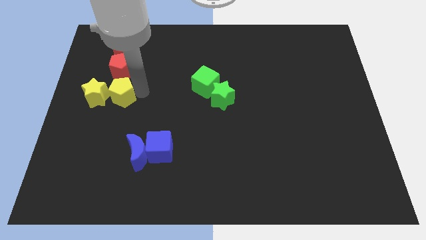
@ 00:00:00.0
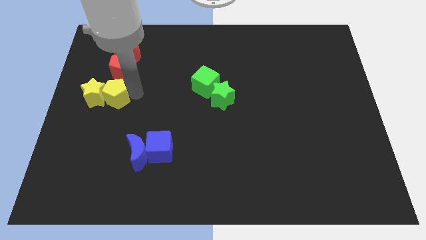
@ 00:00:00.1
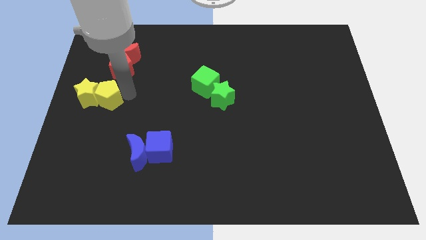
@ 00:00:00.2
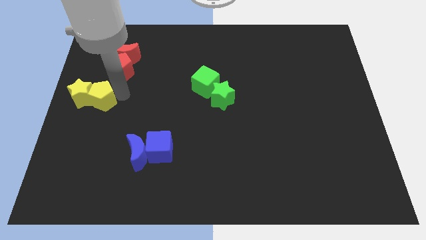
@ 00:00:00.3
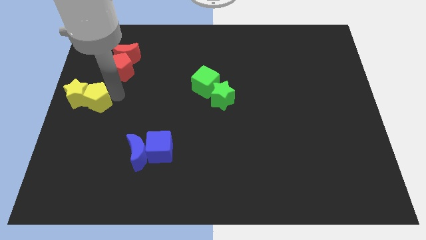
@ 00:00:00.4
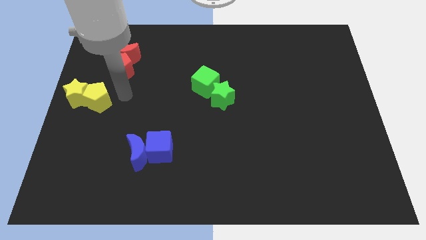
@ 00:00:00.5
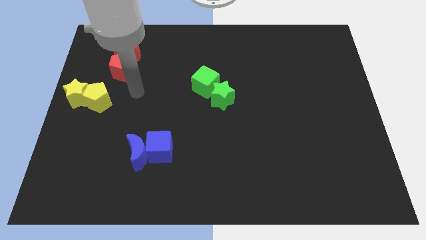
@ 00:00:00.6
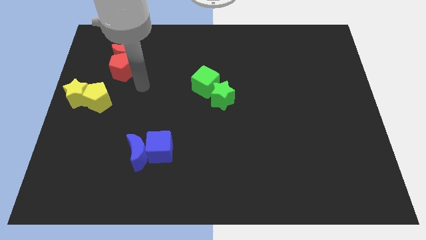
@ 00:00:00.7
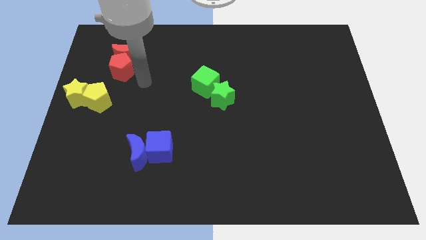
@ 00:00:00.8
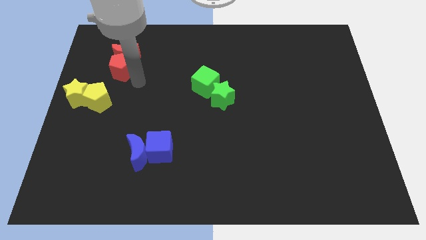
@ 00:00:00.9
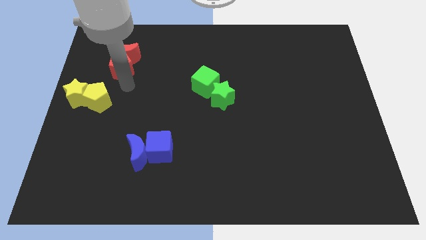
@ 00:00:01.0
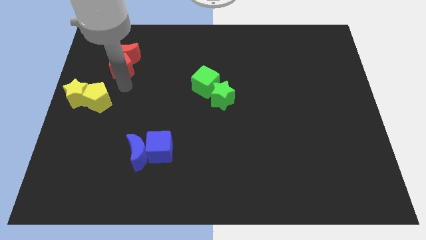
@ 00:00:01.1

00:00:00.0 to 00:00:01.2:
push yellow blocks towards center left

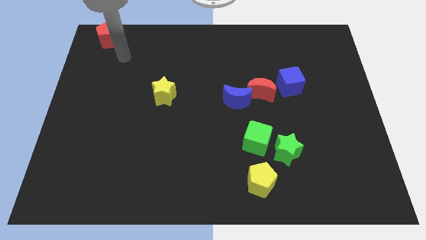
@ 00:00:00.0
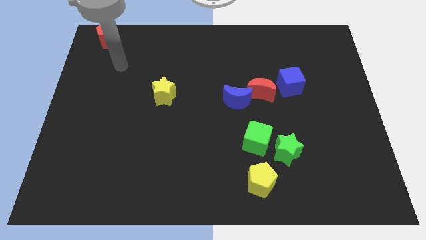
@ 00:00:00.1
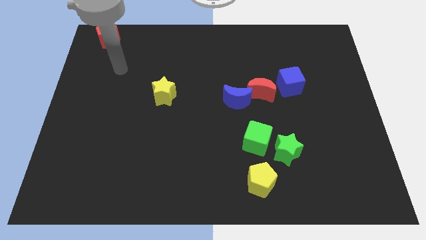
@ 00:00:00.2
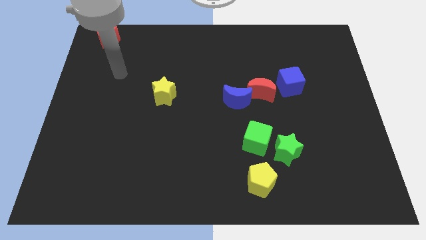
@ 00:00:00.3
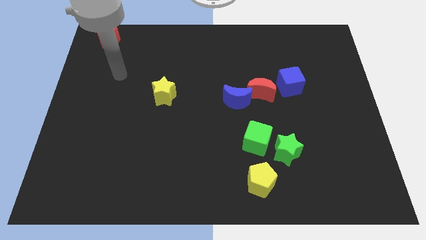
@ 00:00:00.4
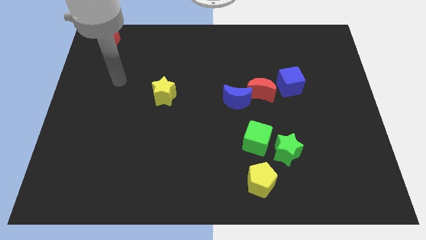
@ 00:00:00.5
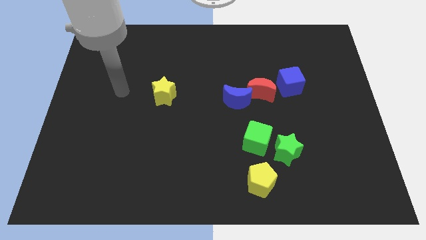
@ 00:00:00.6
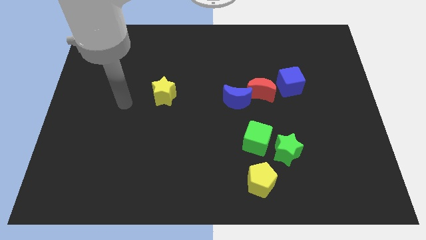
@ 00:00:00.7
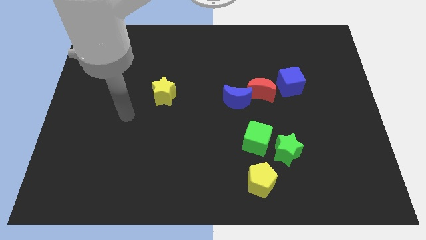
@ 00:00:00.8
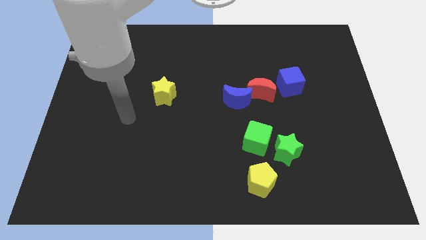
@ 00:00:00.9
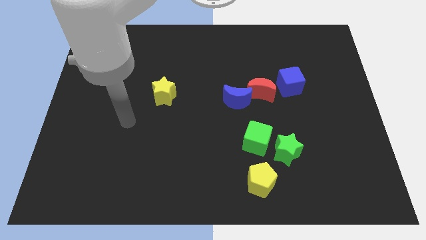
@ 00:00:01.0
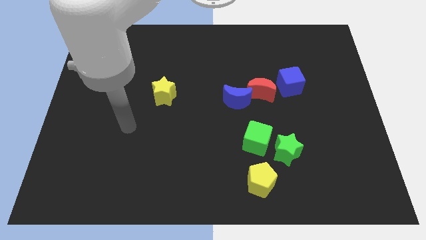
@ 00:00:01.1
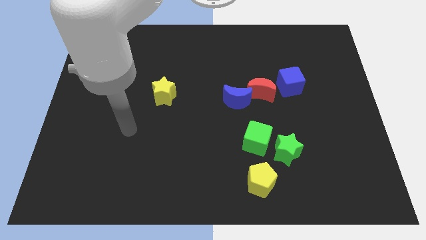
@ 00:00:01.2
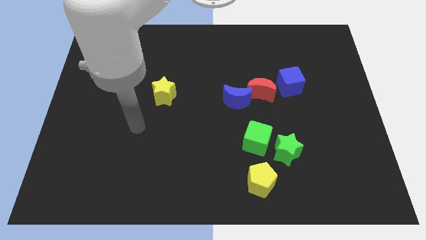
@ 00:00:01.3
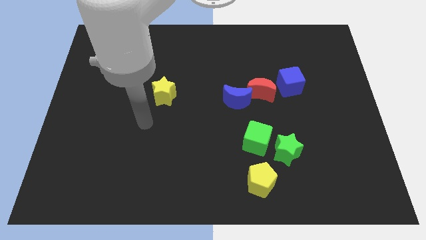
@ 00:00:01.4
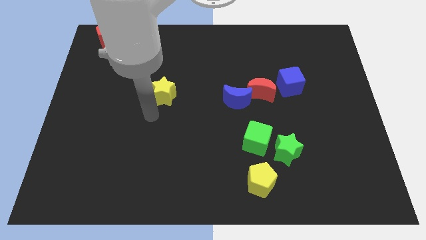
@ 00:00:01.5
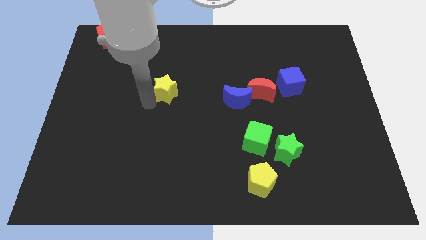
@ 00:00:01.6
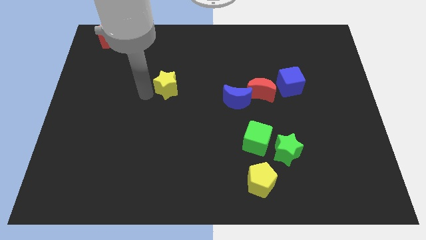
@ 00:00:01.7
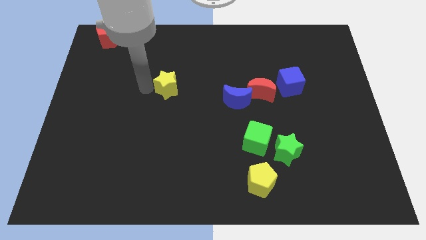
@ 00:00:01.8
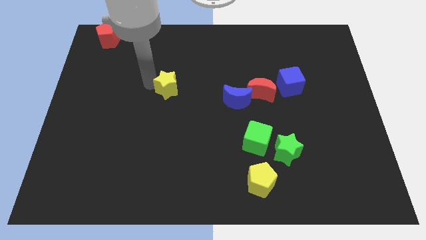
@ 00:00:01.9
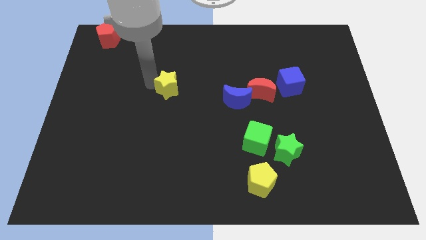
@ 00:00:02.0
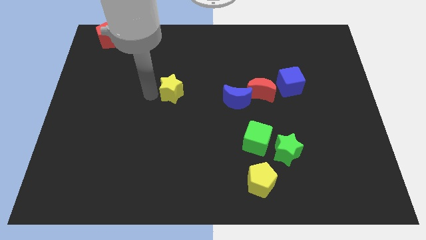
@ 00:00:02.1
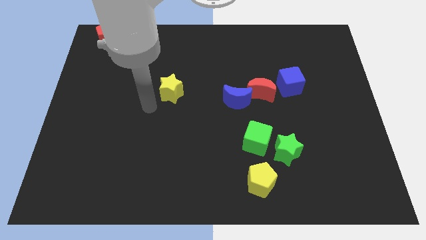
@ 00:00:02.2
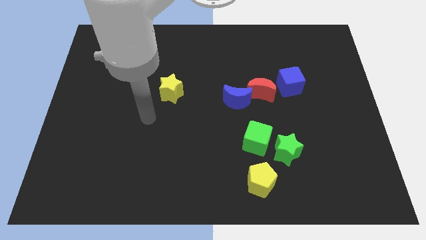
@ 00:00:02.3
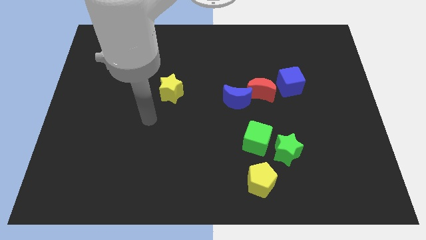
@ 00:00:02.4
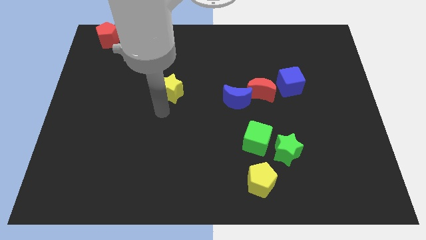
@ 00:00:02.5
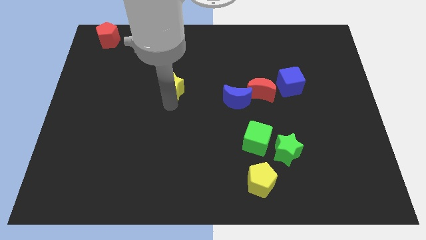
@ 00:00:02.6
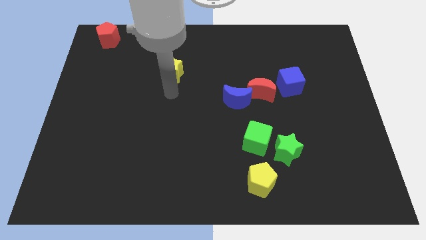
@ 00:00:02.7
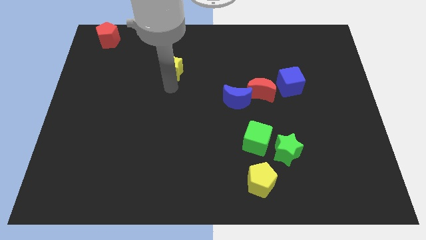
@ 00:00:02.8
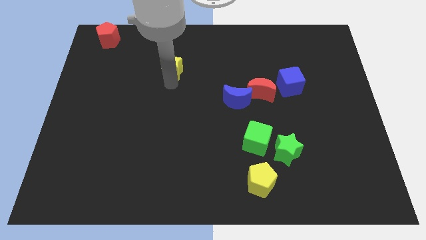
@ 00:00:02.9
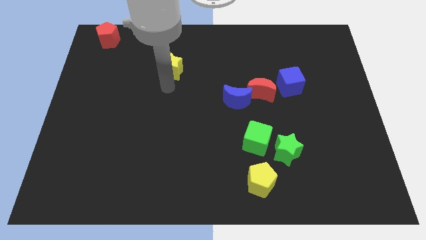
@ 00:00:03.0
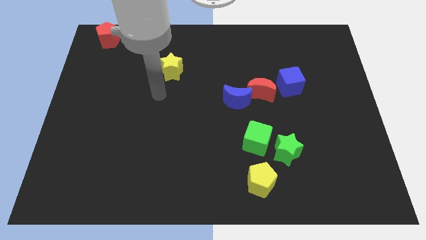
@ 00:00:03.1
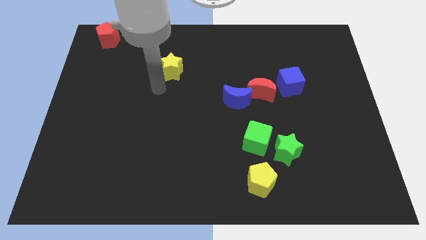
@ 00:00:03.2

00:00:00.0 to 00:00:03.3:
move yellow star in between blue crescent and red pentagon

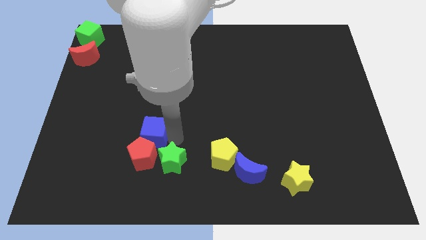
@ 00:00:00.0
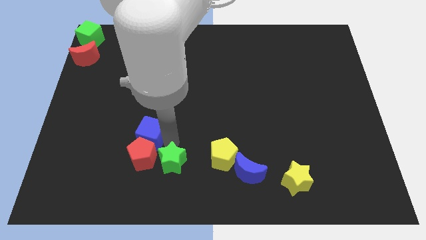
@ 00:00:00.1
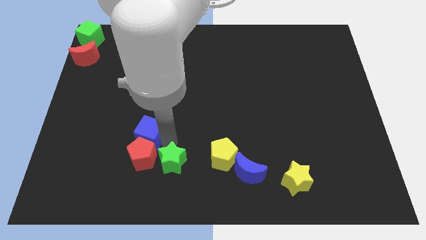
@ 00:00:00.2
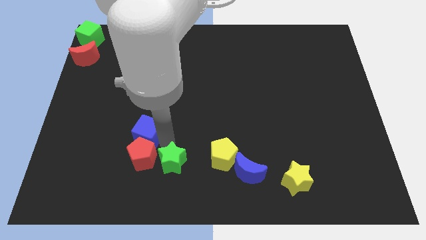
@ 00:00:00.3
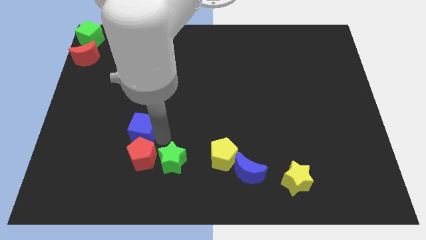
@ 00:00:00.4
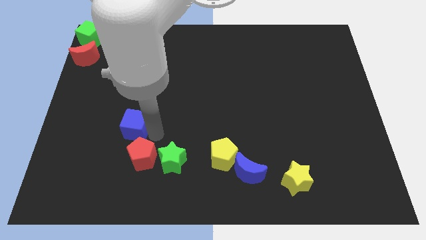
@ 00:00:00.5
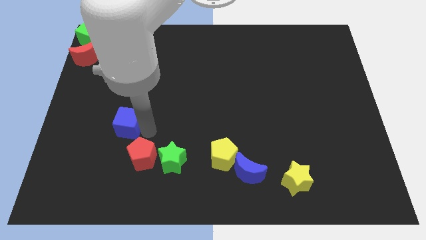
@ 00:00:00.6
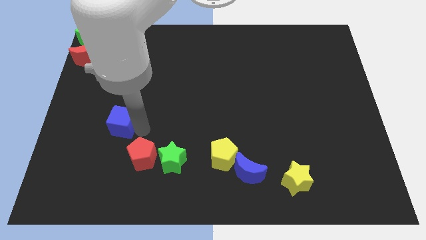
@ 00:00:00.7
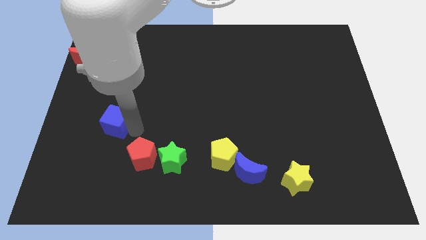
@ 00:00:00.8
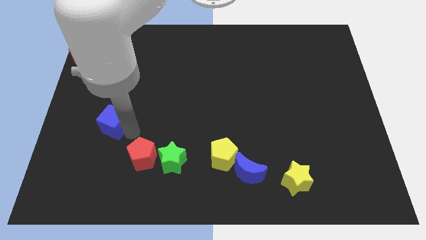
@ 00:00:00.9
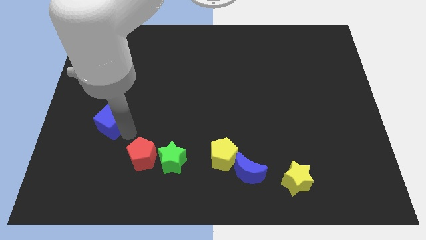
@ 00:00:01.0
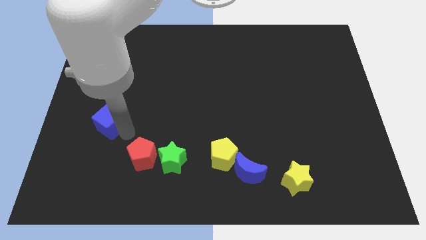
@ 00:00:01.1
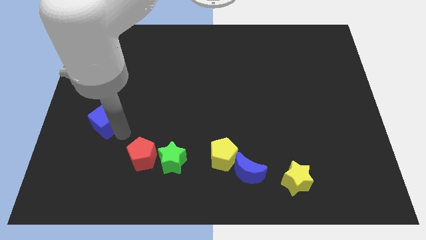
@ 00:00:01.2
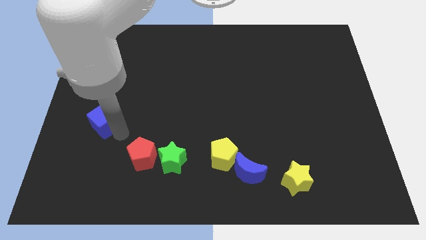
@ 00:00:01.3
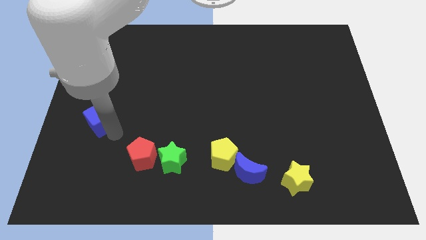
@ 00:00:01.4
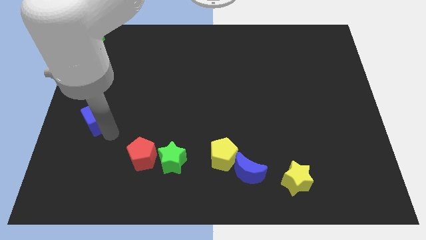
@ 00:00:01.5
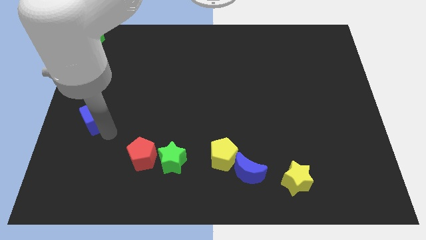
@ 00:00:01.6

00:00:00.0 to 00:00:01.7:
place the blue cube diagonally top left to the red pentagon

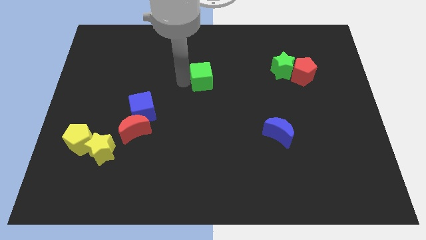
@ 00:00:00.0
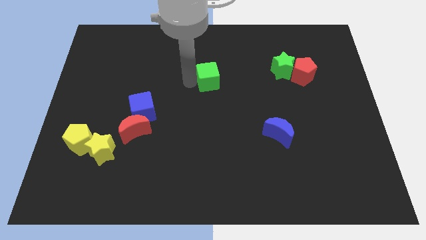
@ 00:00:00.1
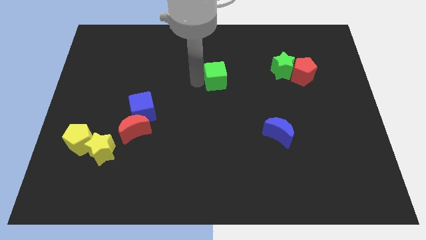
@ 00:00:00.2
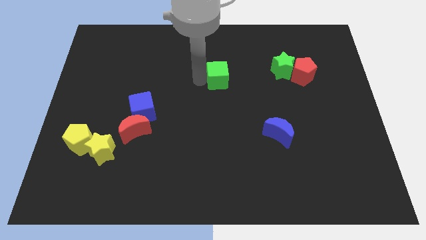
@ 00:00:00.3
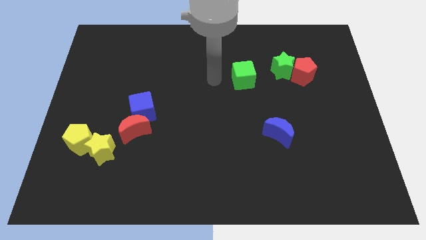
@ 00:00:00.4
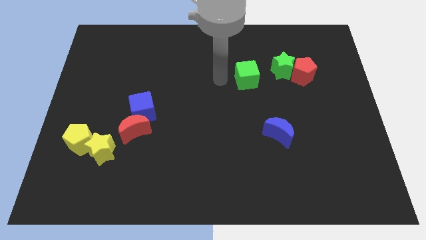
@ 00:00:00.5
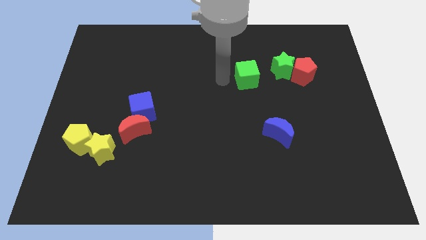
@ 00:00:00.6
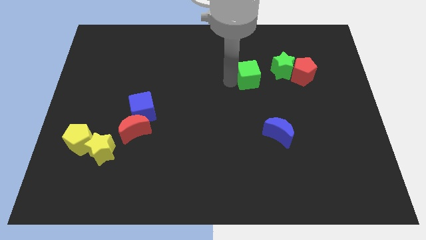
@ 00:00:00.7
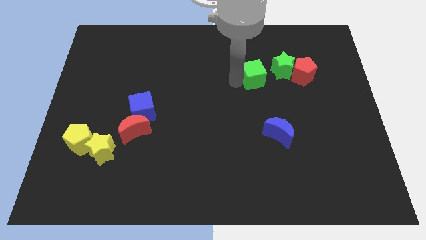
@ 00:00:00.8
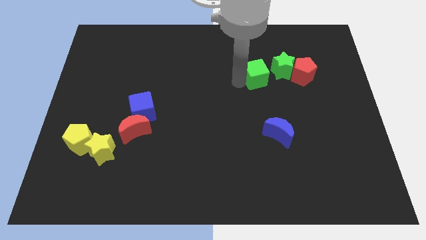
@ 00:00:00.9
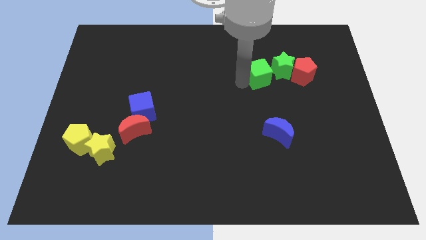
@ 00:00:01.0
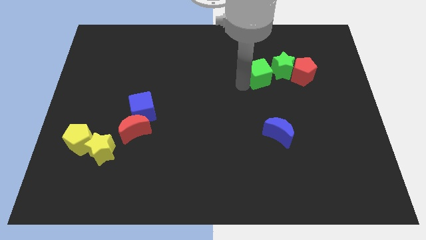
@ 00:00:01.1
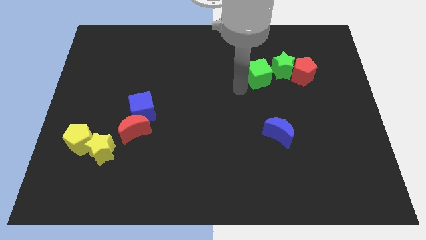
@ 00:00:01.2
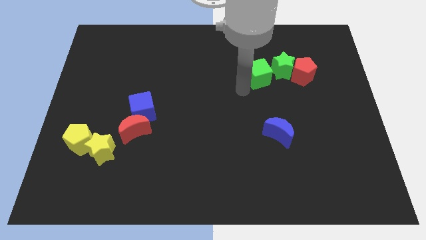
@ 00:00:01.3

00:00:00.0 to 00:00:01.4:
place the green cube to the left side of green star

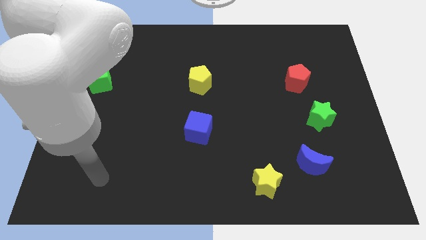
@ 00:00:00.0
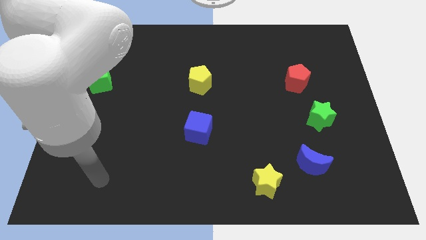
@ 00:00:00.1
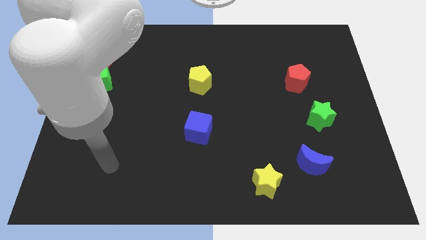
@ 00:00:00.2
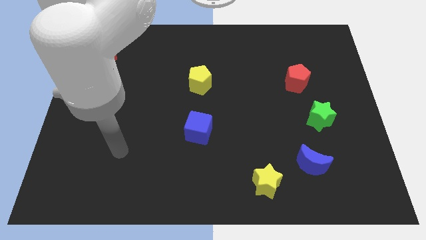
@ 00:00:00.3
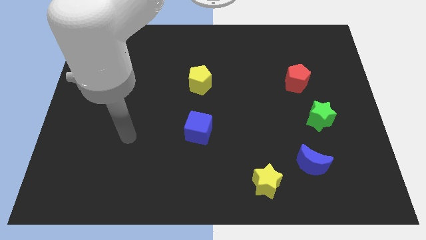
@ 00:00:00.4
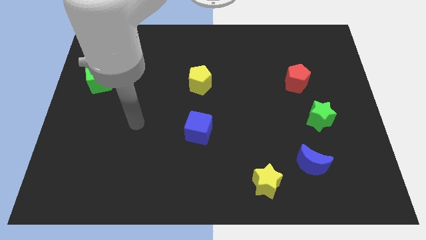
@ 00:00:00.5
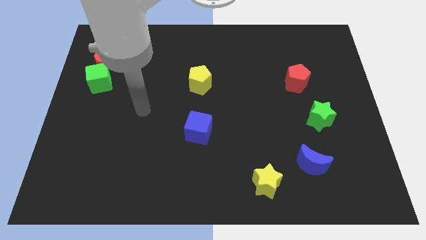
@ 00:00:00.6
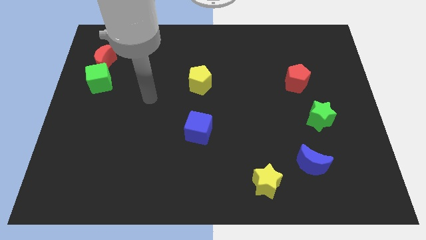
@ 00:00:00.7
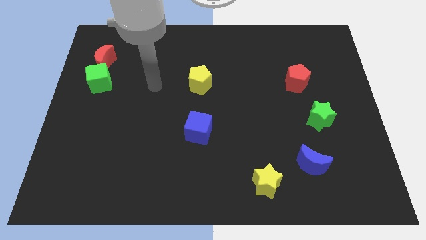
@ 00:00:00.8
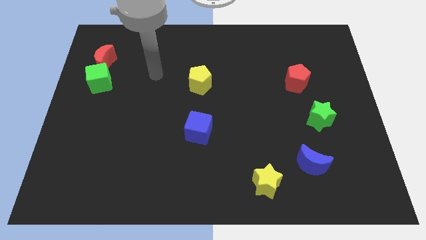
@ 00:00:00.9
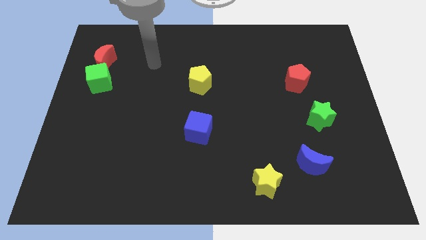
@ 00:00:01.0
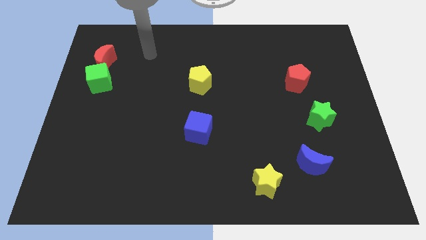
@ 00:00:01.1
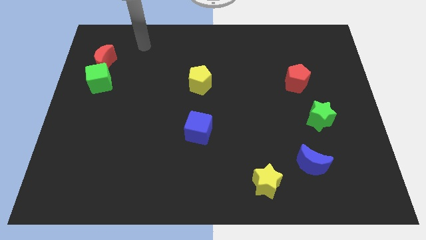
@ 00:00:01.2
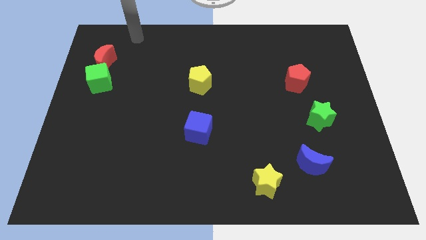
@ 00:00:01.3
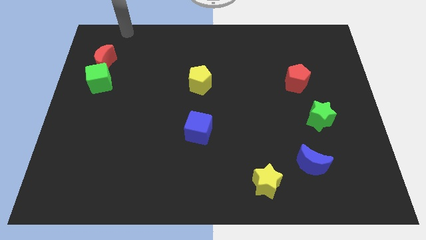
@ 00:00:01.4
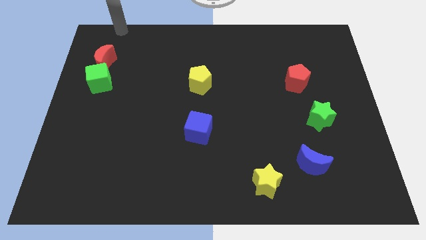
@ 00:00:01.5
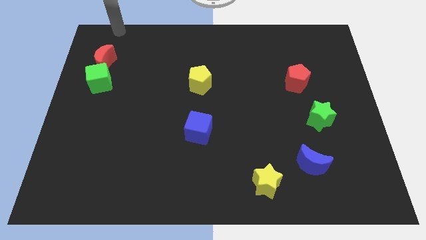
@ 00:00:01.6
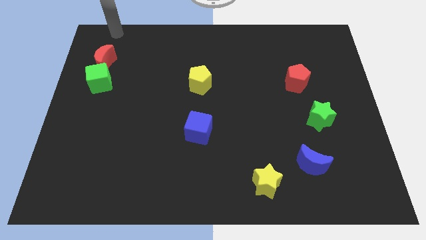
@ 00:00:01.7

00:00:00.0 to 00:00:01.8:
go and point your hand at the top side of the red crescent
